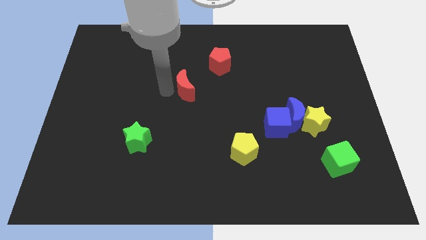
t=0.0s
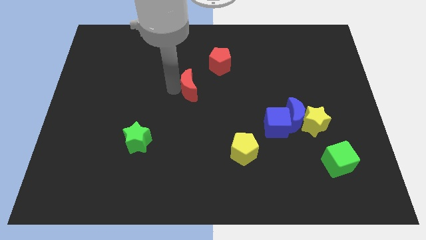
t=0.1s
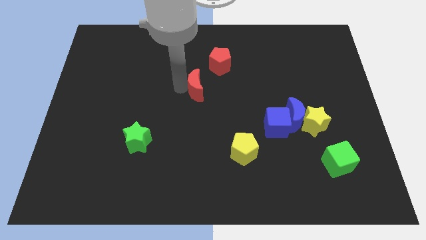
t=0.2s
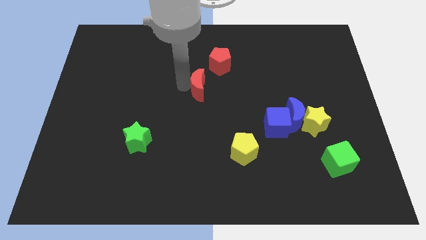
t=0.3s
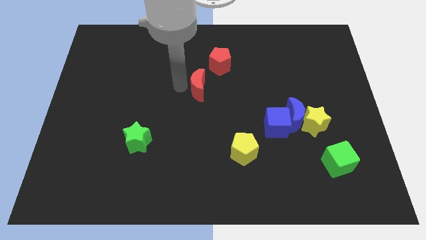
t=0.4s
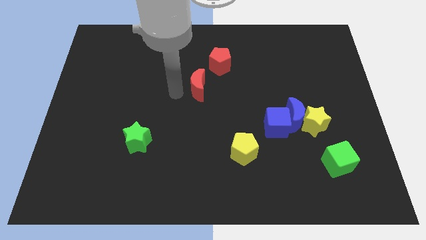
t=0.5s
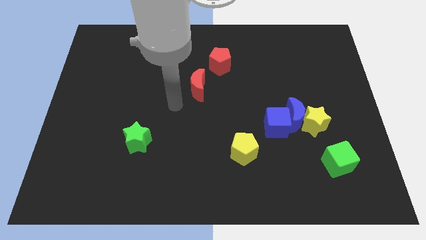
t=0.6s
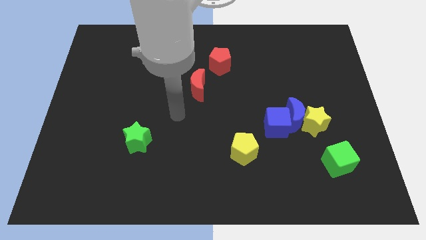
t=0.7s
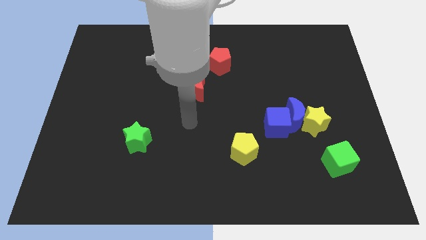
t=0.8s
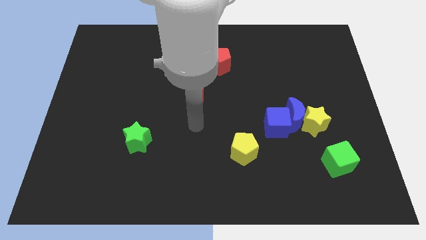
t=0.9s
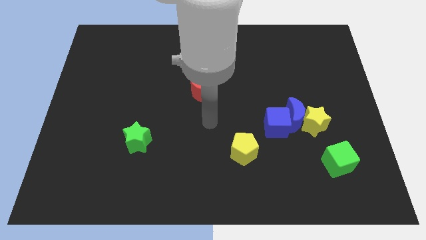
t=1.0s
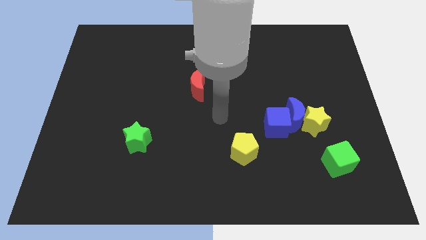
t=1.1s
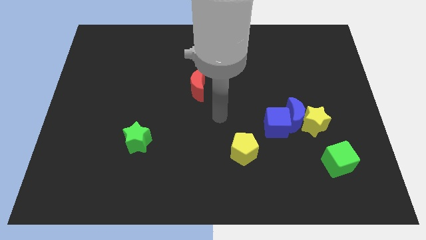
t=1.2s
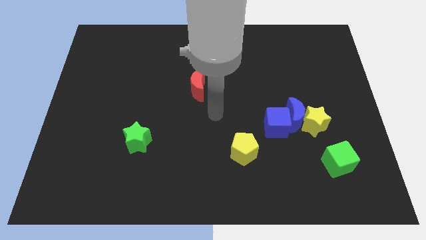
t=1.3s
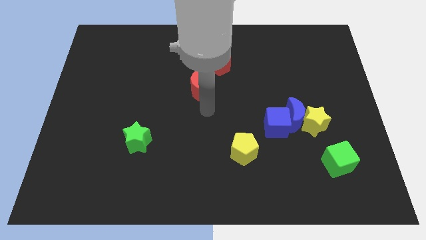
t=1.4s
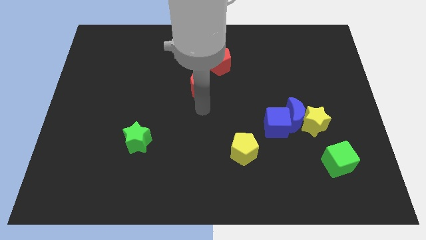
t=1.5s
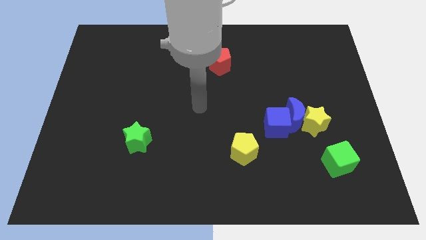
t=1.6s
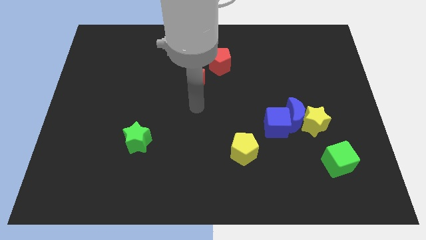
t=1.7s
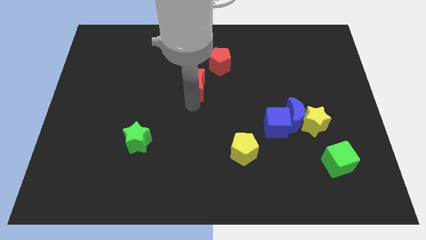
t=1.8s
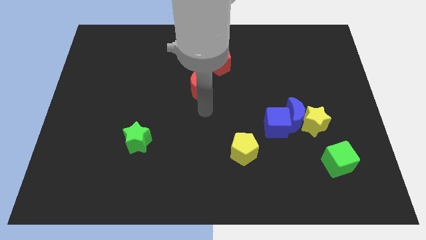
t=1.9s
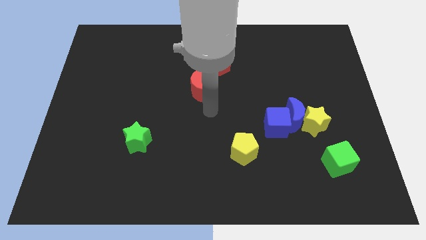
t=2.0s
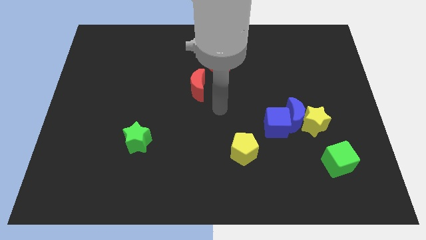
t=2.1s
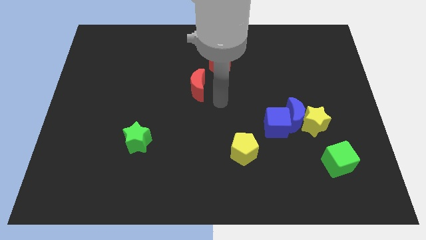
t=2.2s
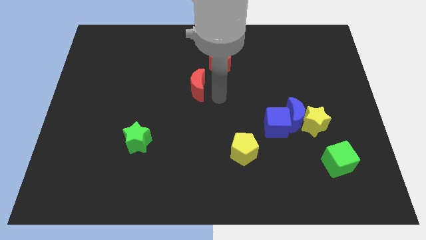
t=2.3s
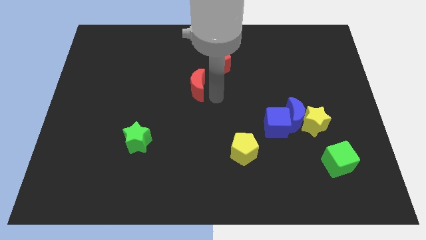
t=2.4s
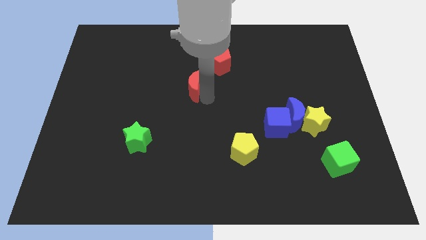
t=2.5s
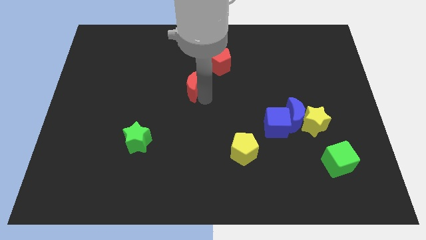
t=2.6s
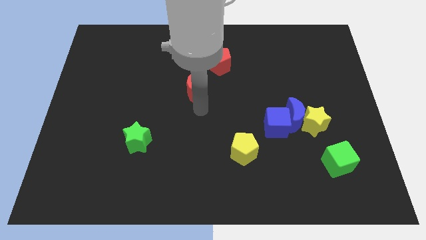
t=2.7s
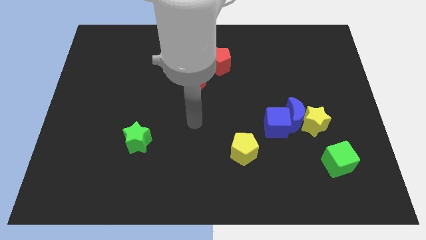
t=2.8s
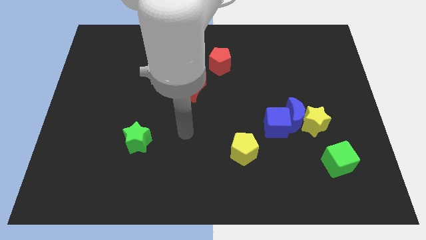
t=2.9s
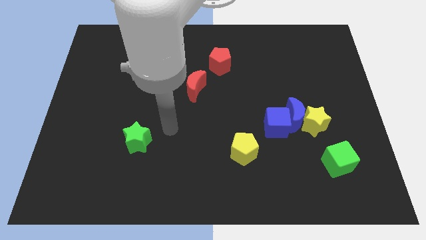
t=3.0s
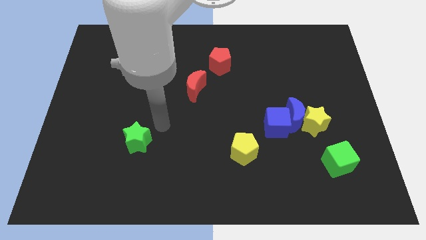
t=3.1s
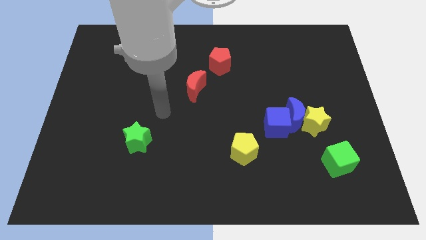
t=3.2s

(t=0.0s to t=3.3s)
push the red crescent towards the red pentagon

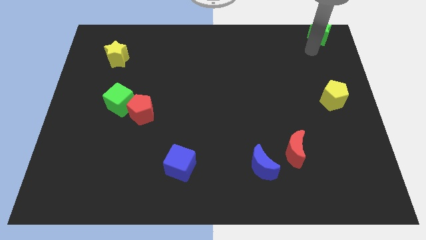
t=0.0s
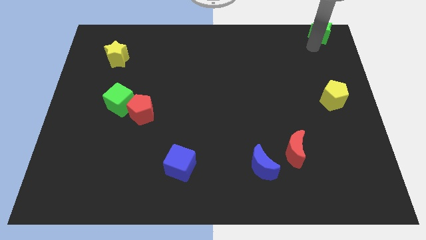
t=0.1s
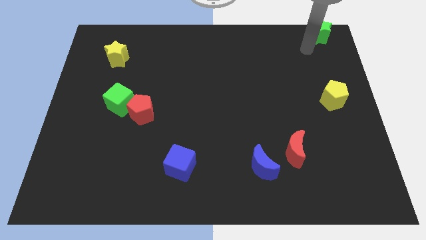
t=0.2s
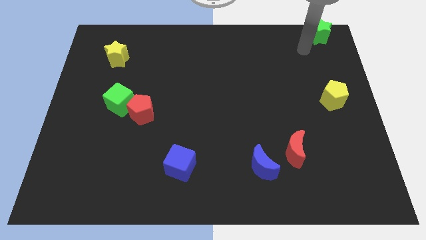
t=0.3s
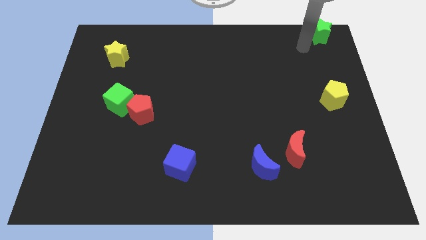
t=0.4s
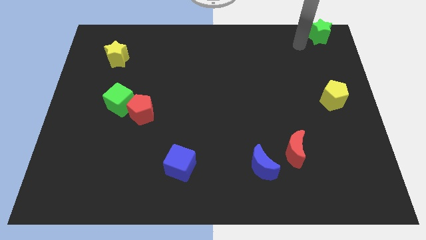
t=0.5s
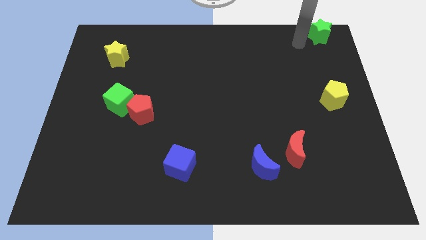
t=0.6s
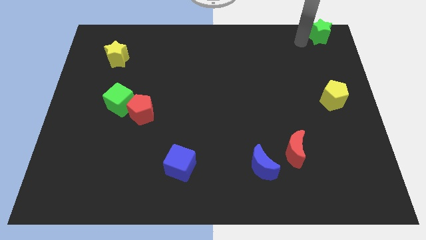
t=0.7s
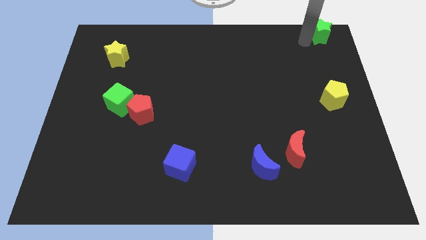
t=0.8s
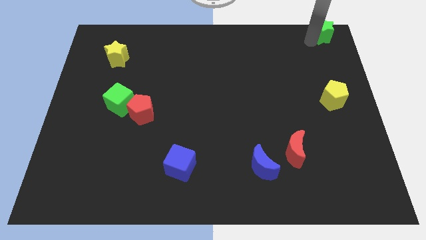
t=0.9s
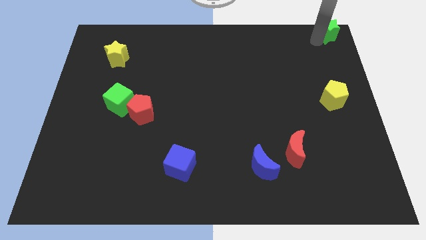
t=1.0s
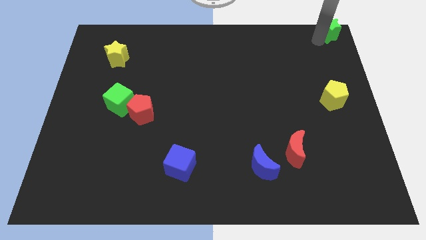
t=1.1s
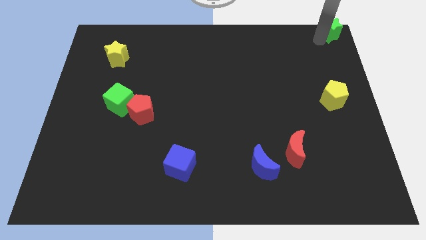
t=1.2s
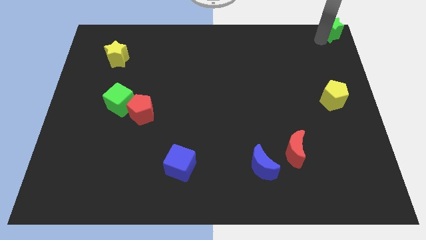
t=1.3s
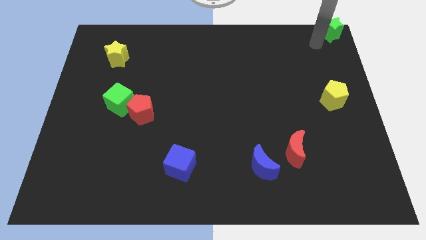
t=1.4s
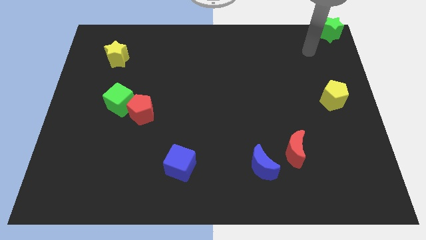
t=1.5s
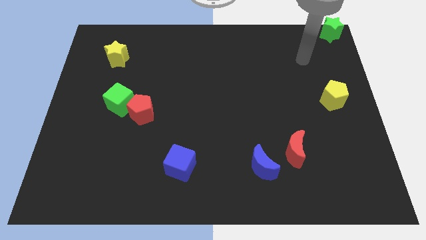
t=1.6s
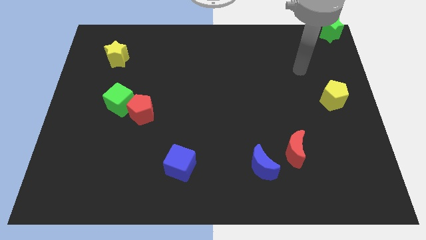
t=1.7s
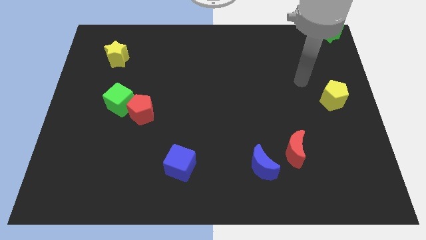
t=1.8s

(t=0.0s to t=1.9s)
place the green star at the top right corner of the board

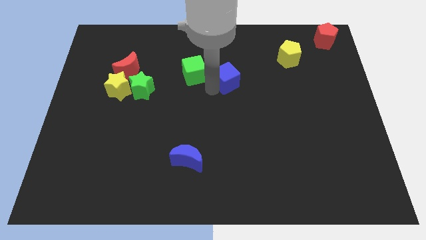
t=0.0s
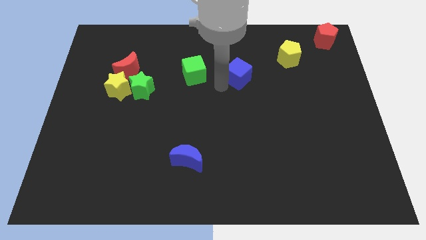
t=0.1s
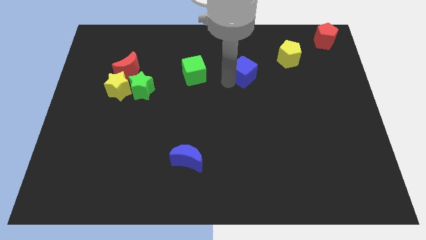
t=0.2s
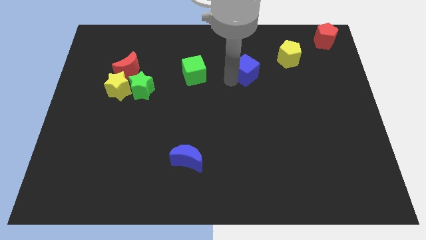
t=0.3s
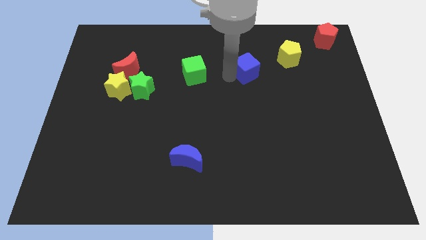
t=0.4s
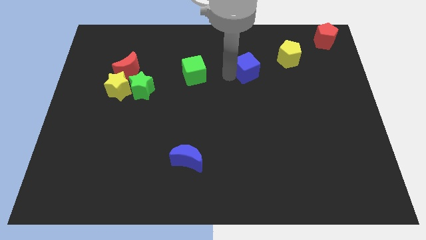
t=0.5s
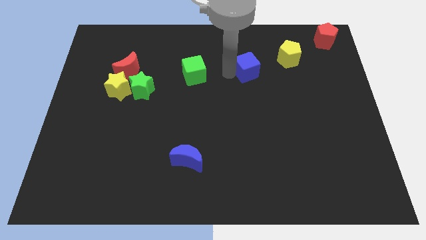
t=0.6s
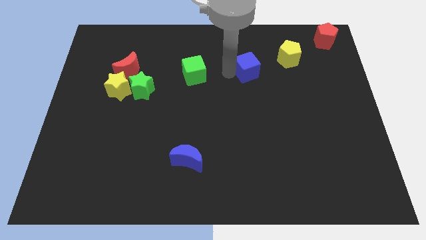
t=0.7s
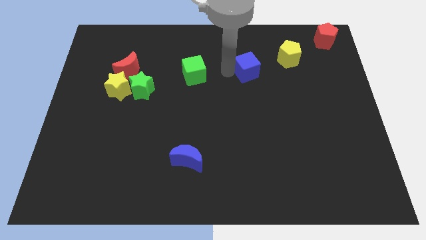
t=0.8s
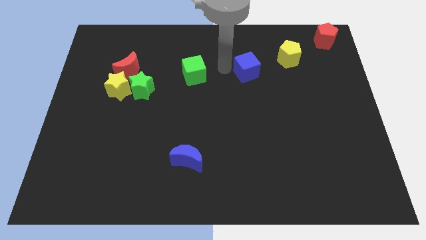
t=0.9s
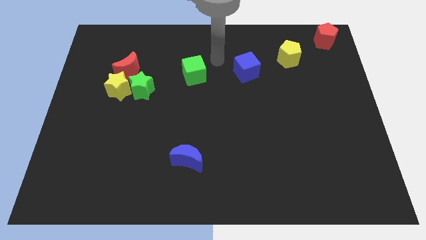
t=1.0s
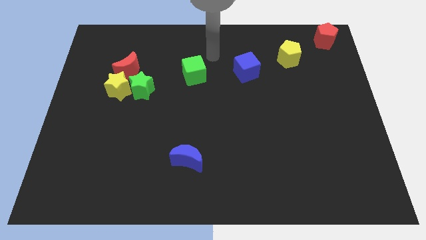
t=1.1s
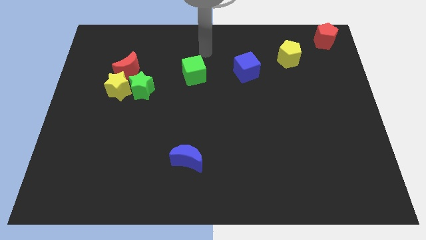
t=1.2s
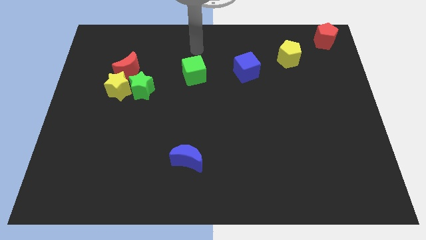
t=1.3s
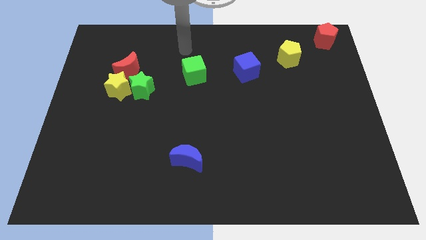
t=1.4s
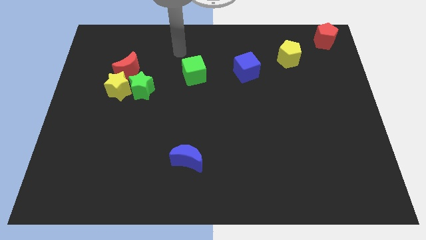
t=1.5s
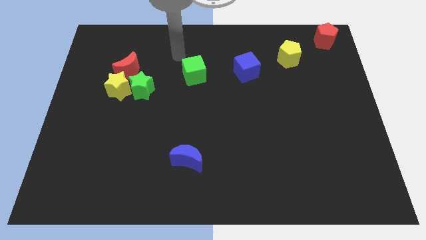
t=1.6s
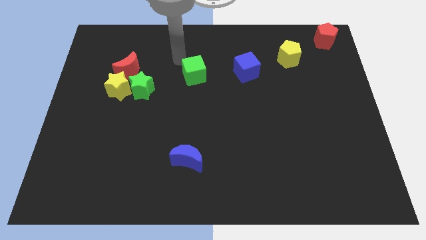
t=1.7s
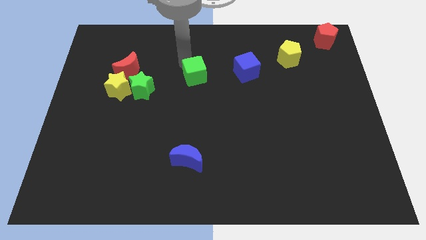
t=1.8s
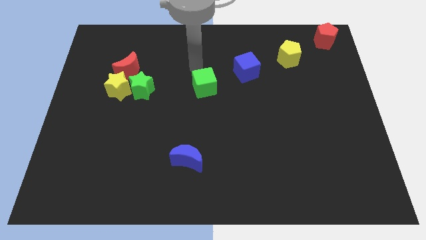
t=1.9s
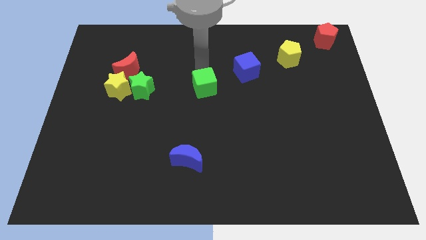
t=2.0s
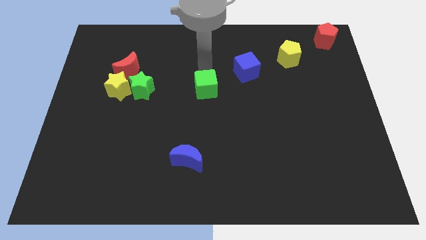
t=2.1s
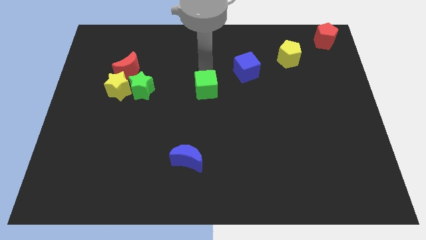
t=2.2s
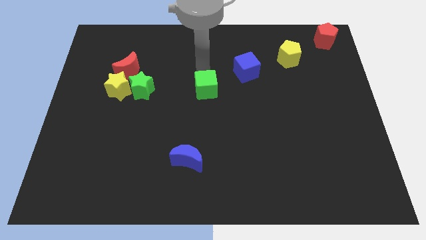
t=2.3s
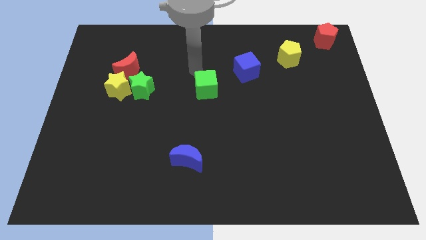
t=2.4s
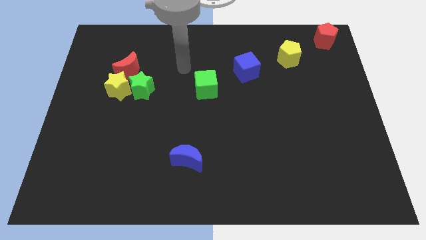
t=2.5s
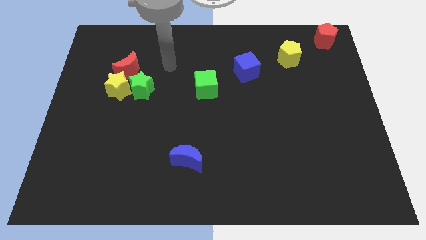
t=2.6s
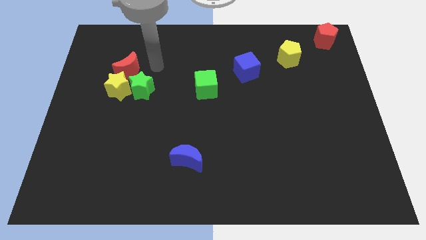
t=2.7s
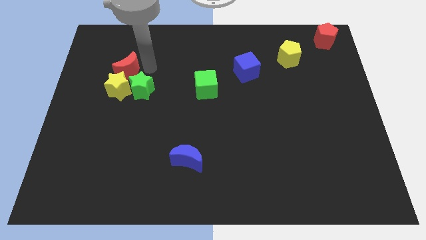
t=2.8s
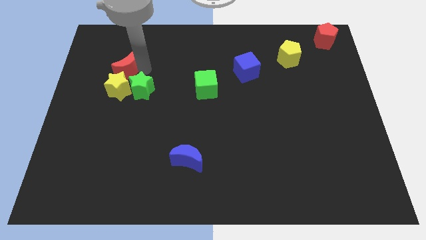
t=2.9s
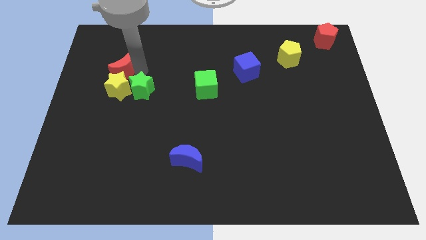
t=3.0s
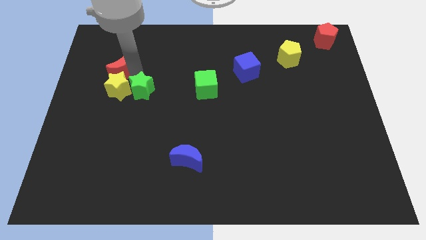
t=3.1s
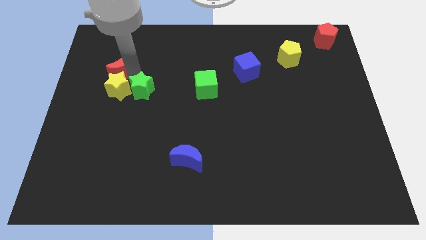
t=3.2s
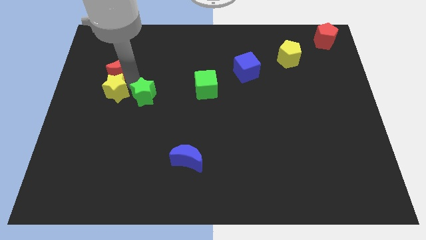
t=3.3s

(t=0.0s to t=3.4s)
slide the green cube parallel to the right side of the green cube

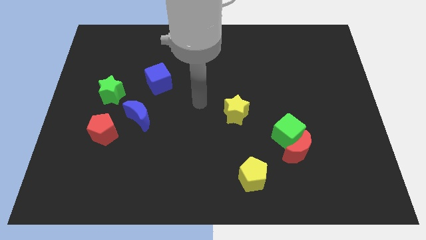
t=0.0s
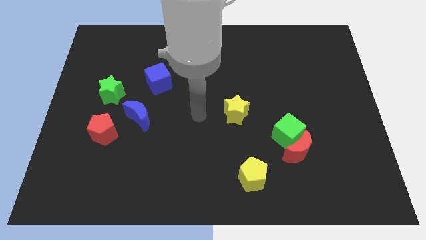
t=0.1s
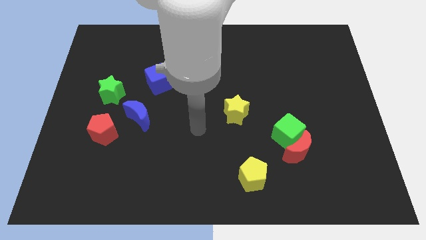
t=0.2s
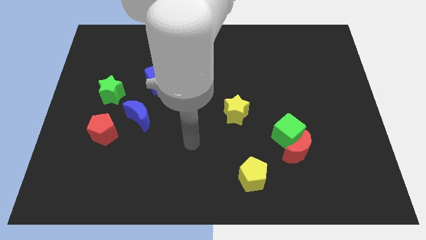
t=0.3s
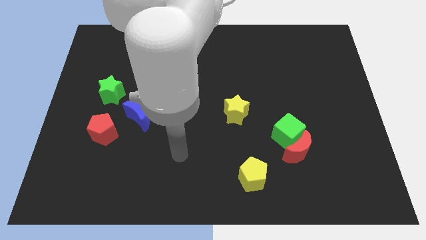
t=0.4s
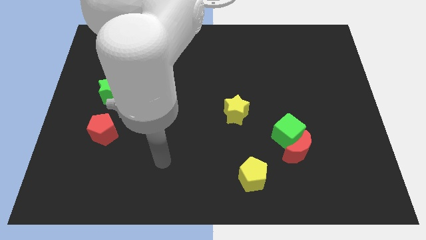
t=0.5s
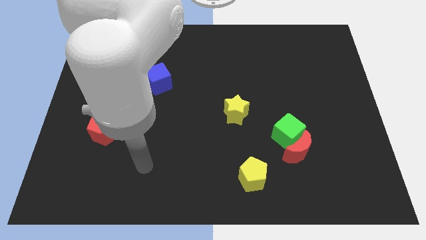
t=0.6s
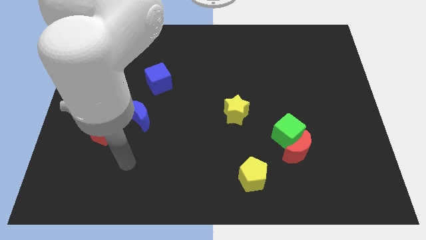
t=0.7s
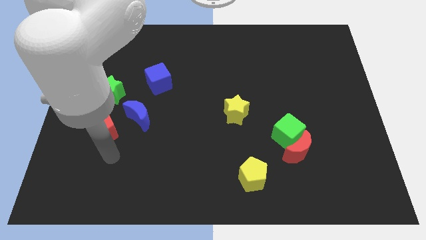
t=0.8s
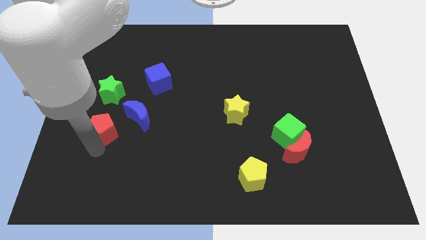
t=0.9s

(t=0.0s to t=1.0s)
move the arm to the bottom of the red pentagon
